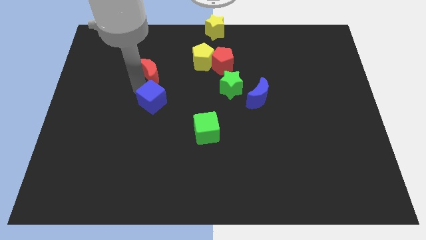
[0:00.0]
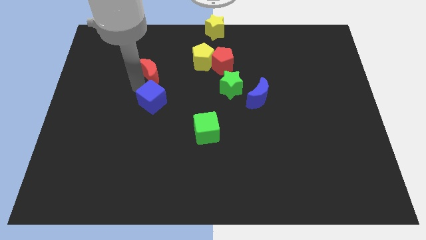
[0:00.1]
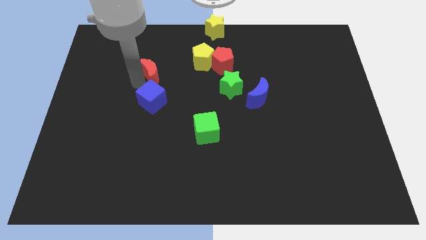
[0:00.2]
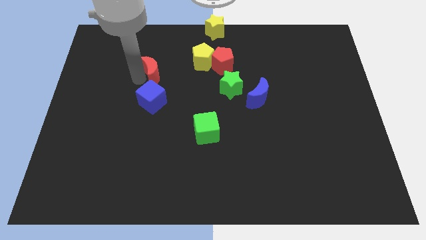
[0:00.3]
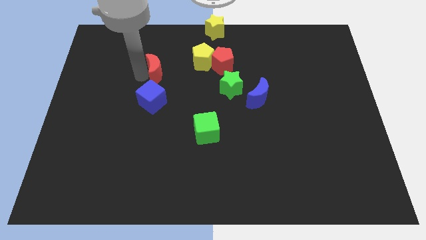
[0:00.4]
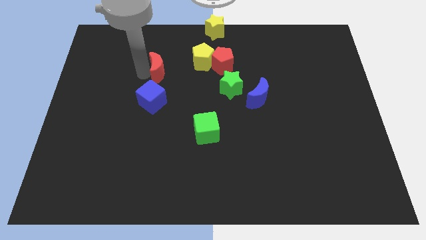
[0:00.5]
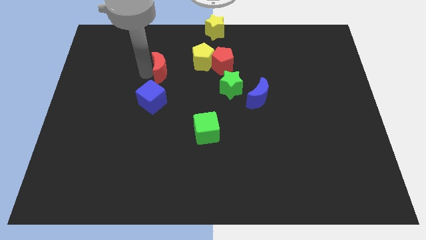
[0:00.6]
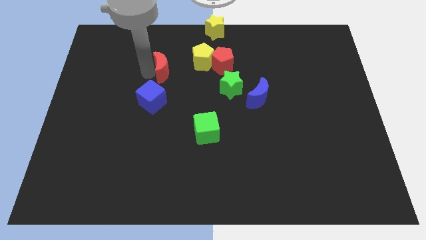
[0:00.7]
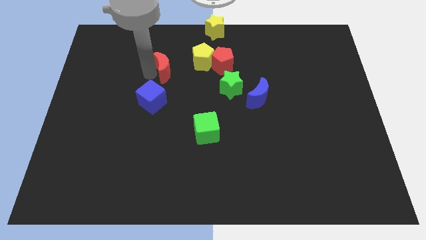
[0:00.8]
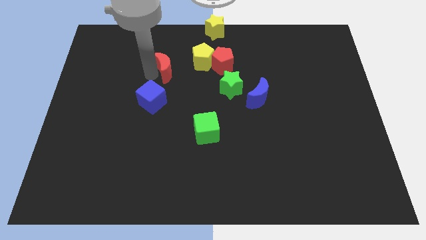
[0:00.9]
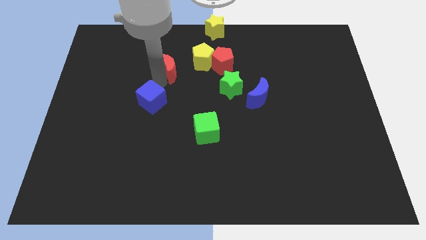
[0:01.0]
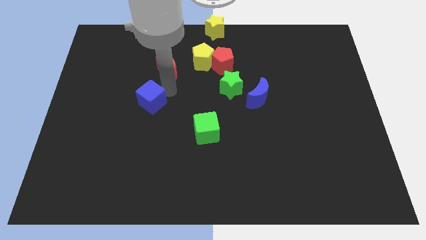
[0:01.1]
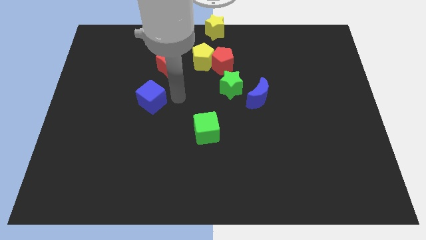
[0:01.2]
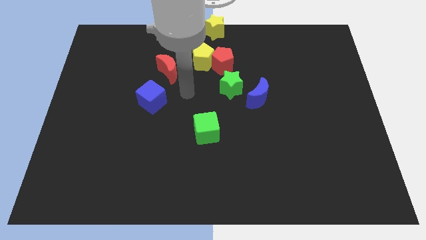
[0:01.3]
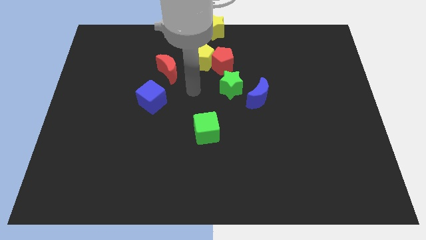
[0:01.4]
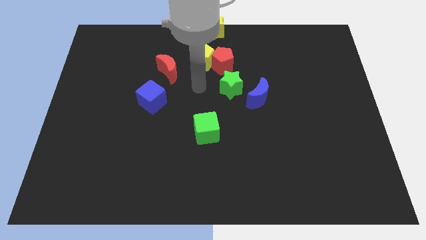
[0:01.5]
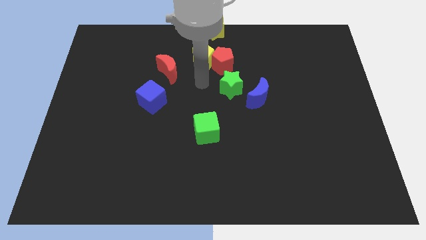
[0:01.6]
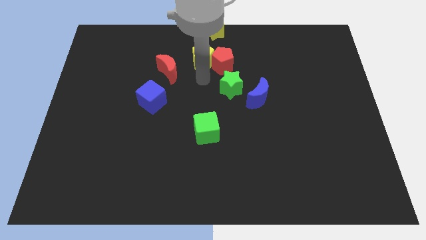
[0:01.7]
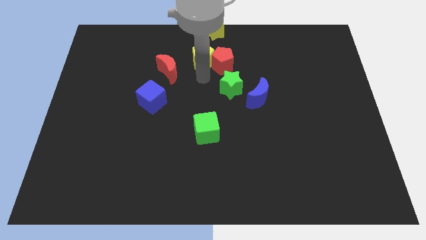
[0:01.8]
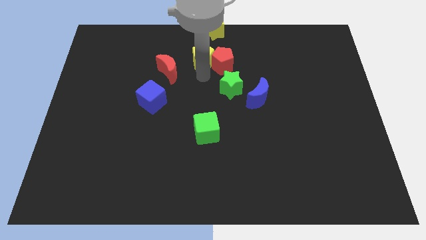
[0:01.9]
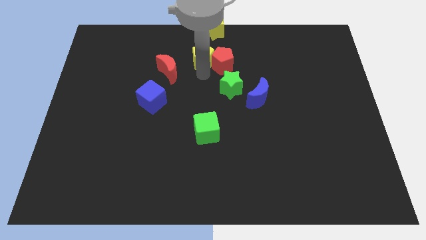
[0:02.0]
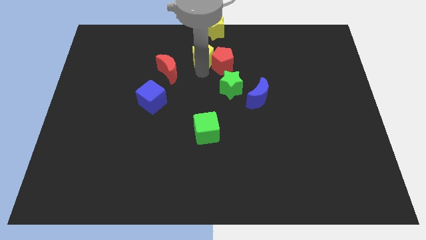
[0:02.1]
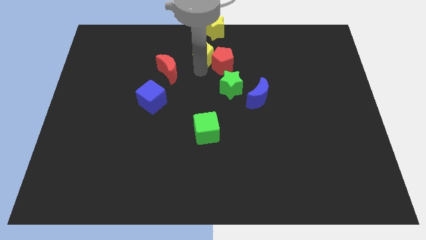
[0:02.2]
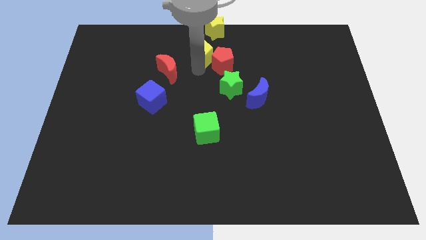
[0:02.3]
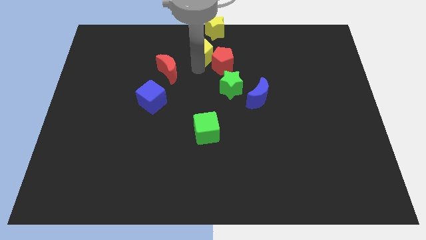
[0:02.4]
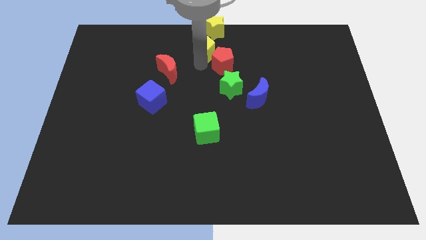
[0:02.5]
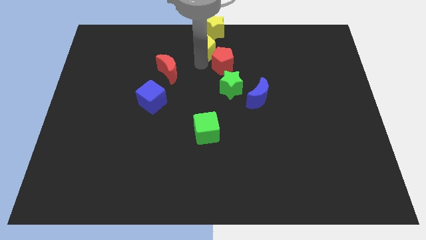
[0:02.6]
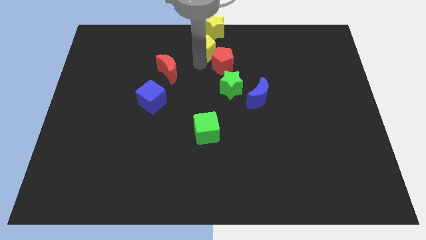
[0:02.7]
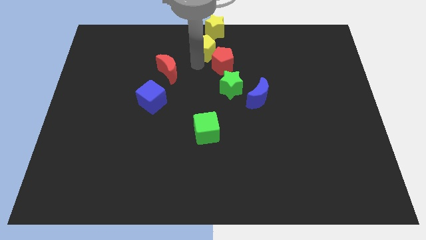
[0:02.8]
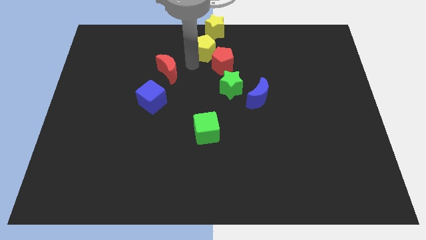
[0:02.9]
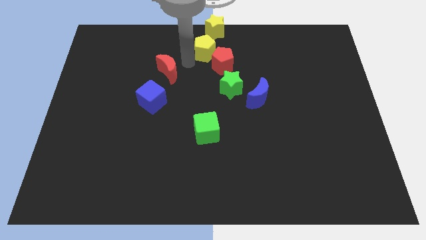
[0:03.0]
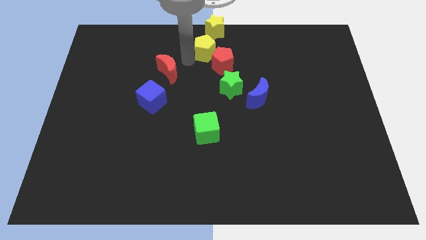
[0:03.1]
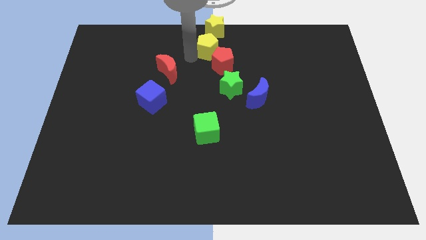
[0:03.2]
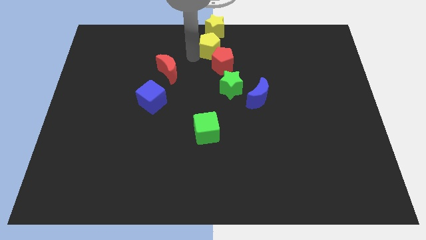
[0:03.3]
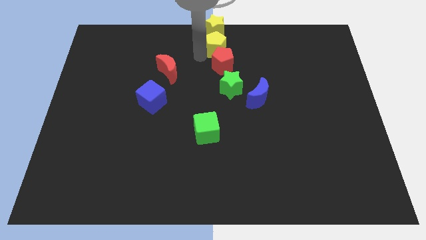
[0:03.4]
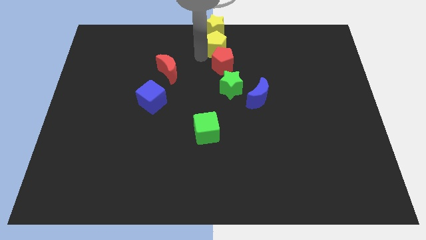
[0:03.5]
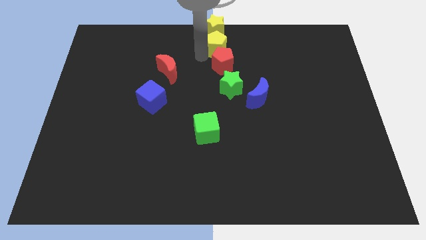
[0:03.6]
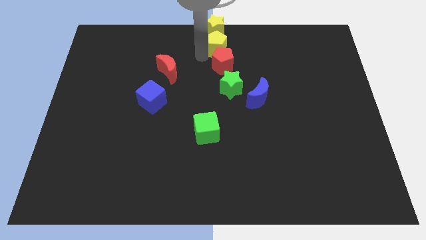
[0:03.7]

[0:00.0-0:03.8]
push yellow pentagon below yellow star

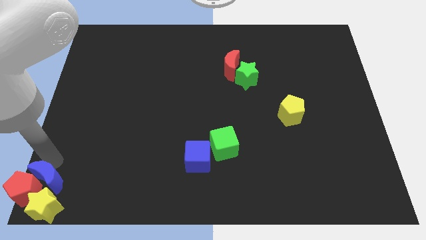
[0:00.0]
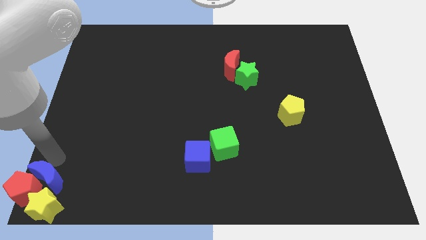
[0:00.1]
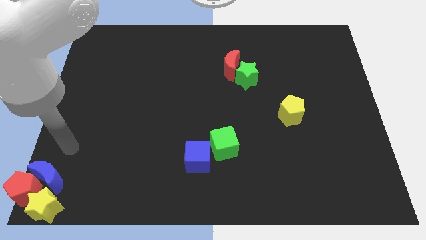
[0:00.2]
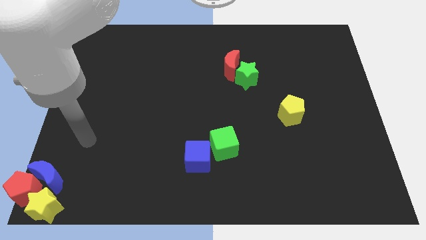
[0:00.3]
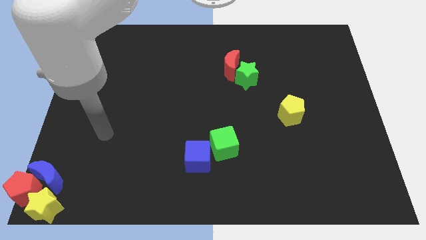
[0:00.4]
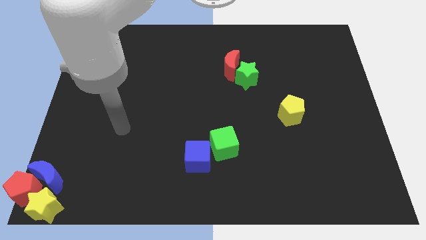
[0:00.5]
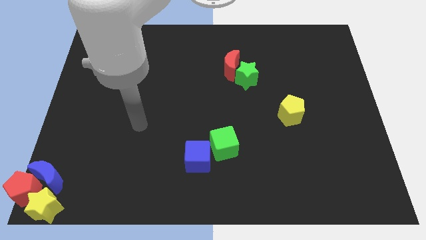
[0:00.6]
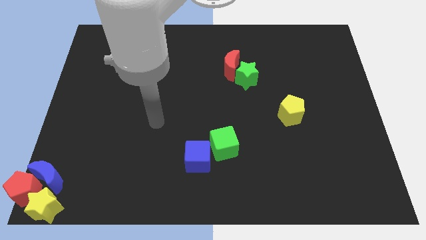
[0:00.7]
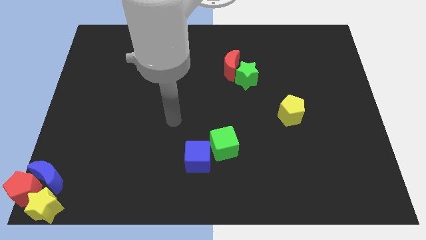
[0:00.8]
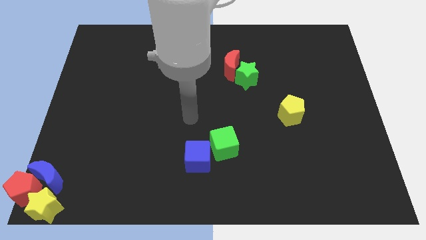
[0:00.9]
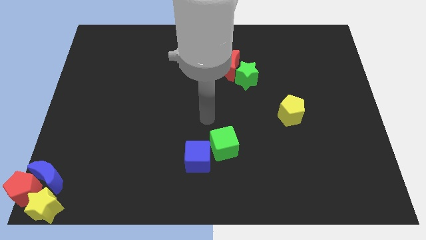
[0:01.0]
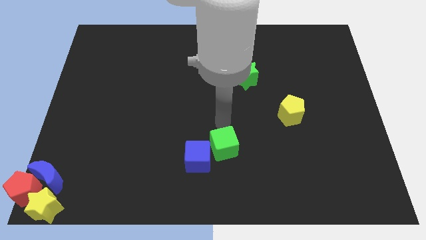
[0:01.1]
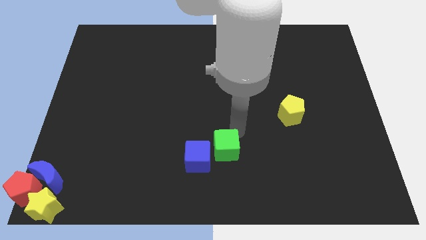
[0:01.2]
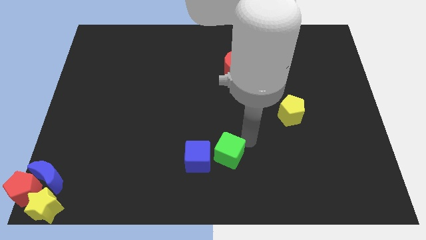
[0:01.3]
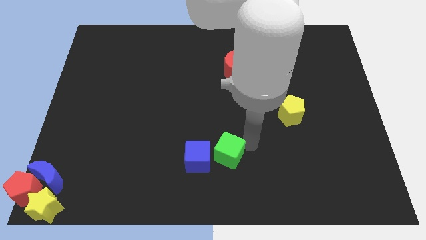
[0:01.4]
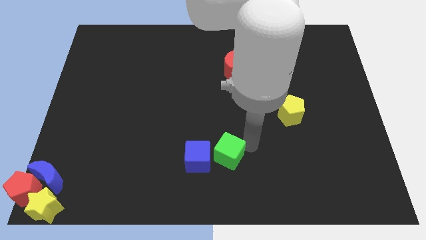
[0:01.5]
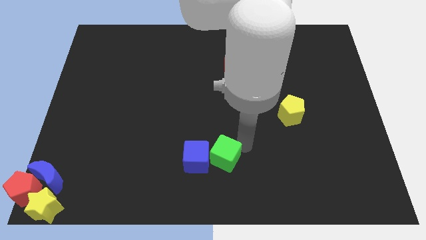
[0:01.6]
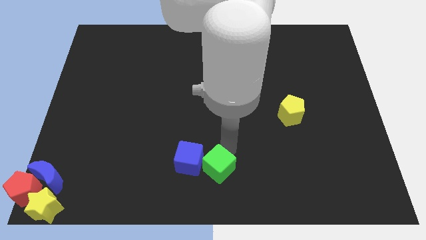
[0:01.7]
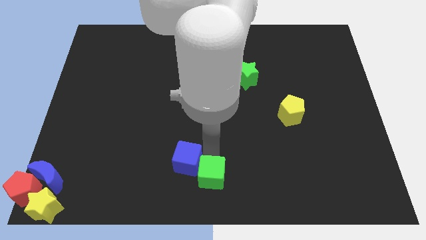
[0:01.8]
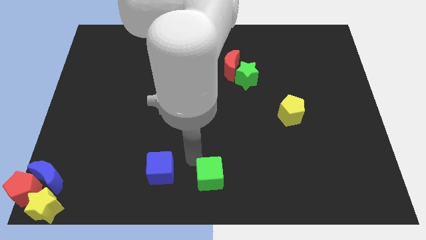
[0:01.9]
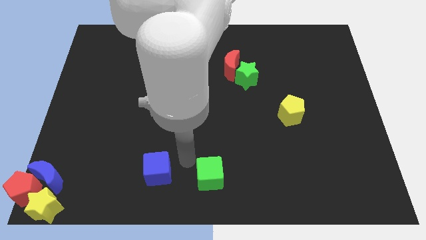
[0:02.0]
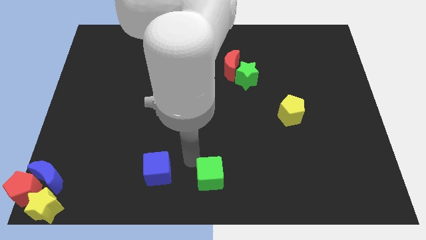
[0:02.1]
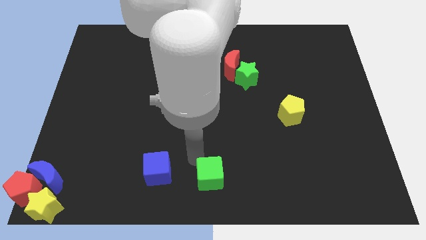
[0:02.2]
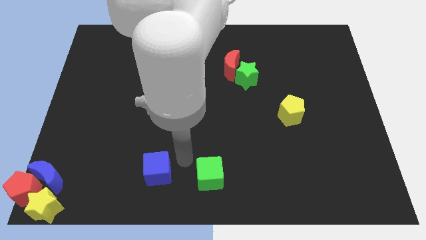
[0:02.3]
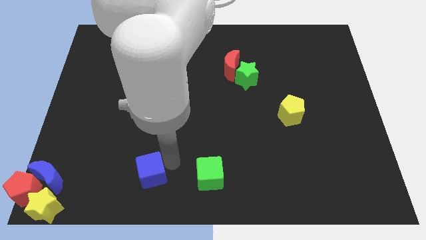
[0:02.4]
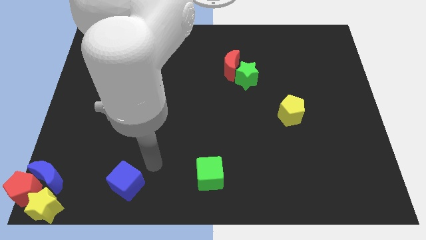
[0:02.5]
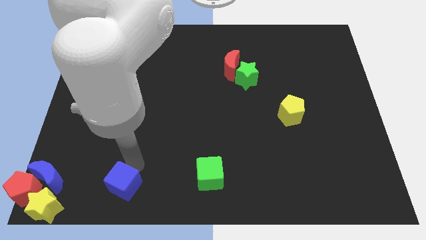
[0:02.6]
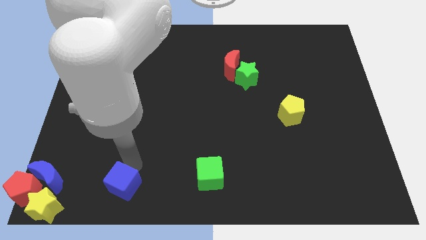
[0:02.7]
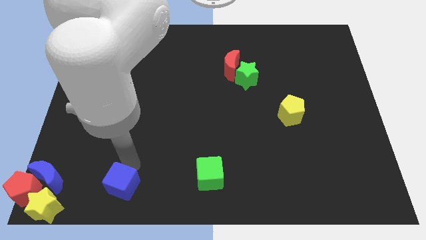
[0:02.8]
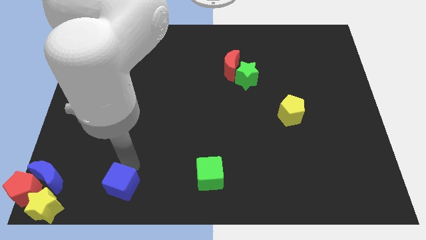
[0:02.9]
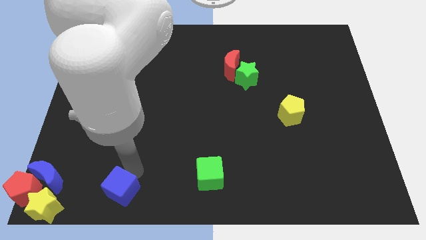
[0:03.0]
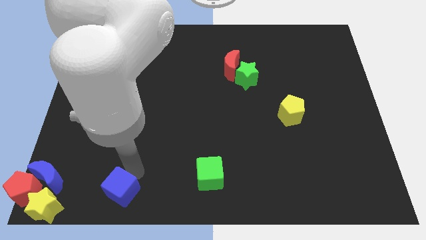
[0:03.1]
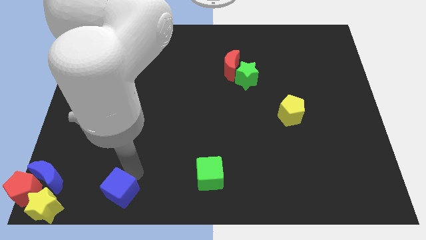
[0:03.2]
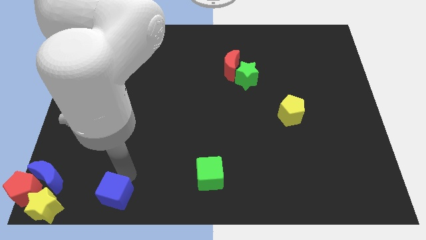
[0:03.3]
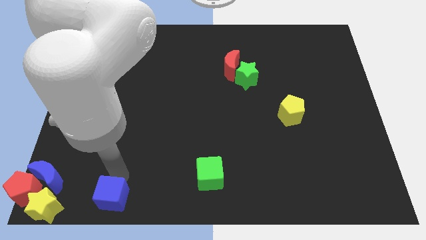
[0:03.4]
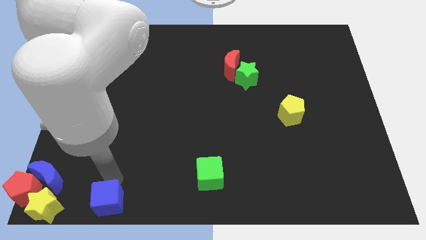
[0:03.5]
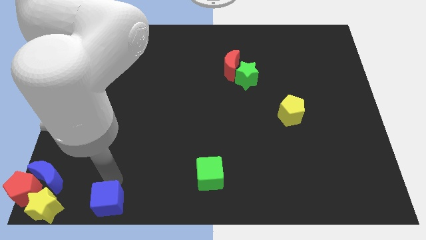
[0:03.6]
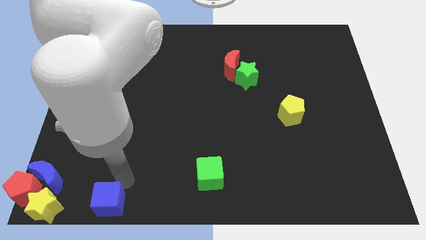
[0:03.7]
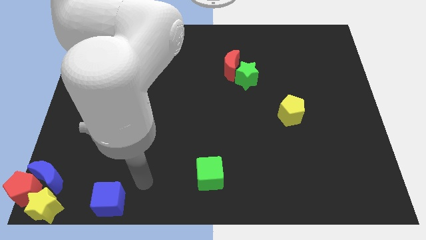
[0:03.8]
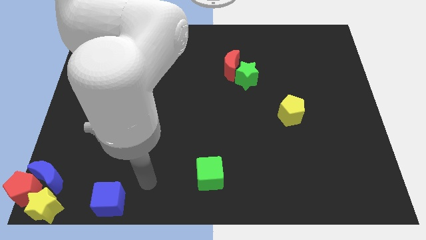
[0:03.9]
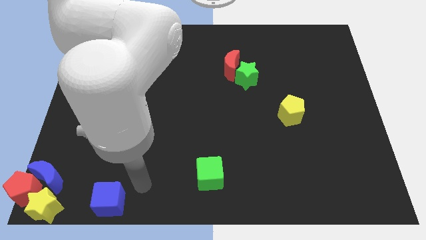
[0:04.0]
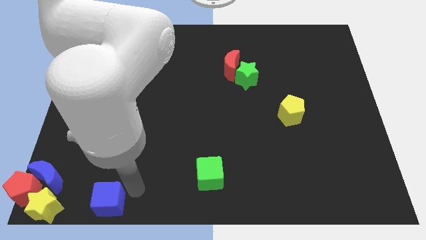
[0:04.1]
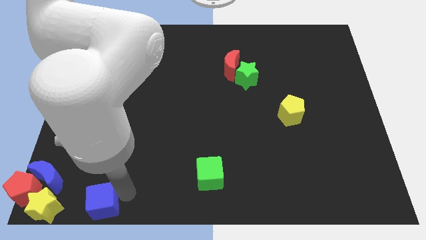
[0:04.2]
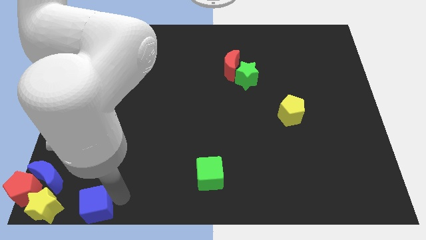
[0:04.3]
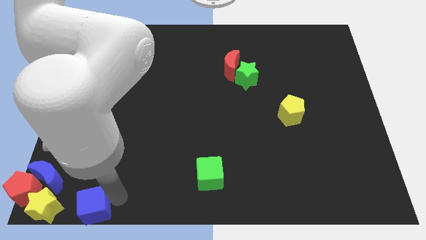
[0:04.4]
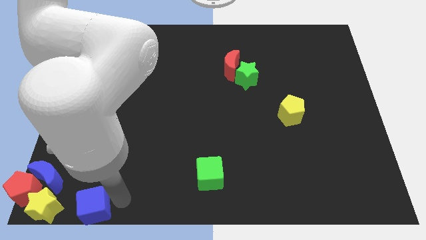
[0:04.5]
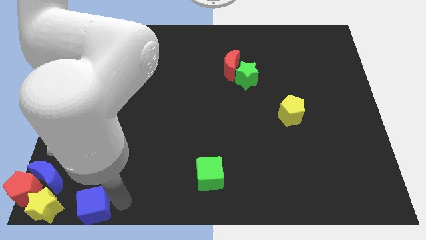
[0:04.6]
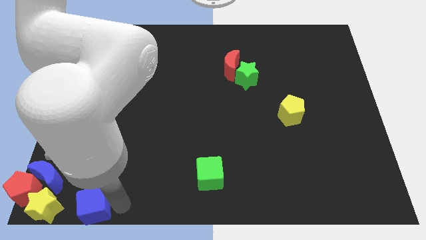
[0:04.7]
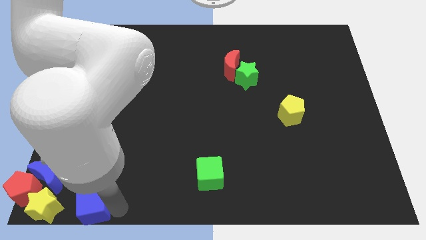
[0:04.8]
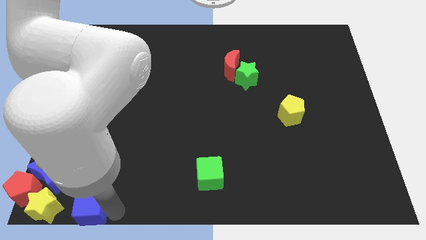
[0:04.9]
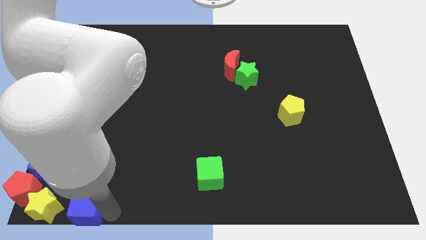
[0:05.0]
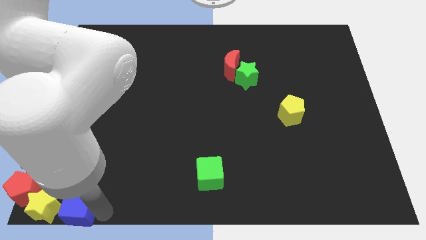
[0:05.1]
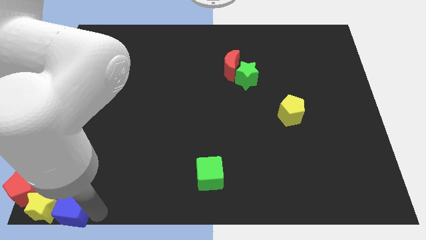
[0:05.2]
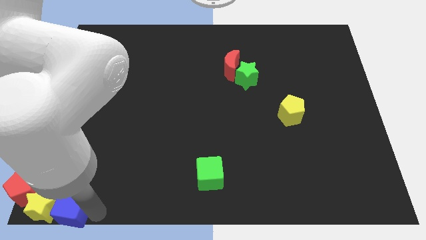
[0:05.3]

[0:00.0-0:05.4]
drag the blue cube into the right side of the yellow star
